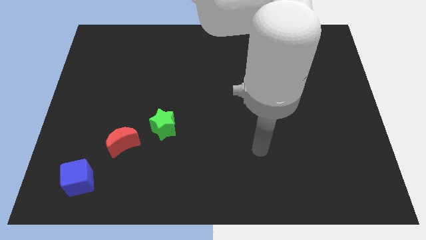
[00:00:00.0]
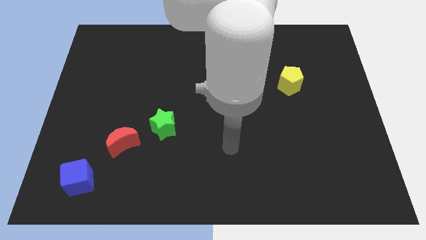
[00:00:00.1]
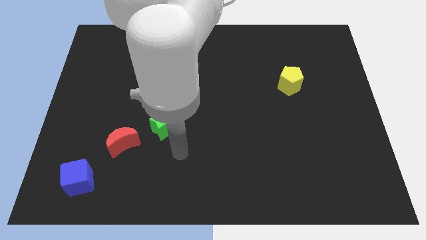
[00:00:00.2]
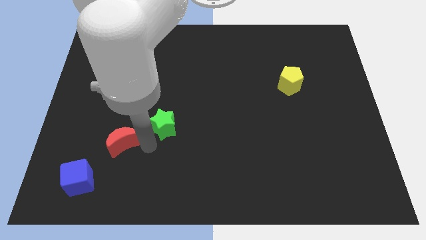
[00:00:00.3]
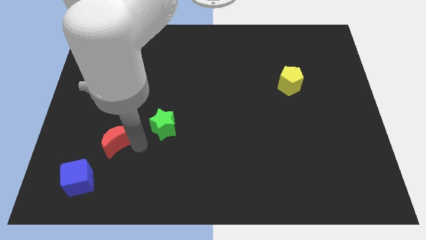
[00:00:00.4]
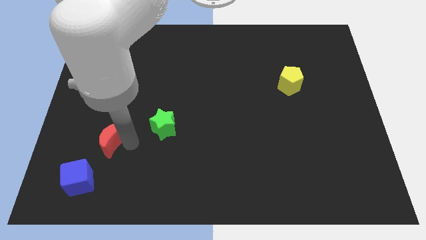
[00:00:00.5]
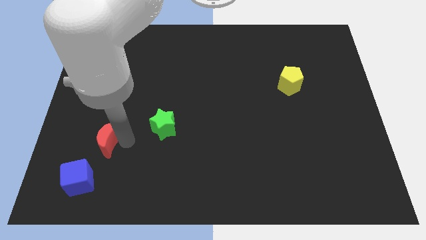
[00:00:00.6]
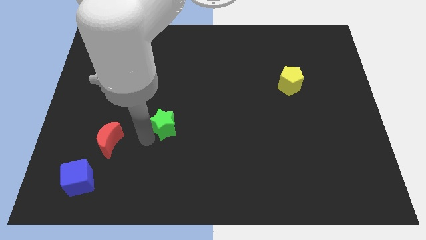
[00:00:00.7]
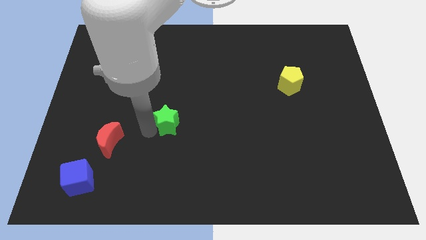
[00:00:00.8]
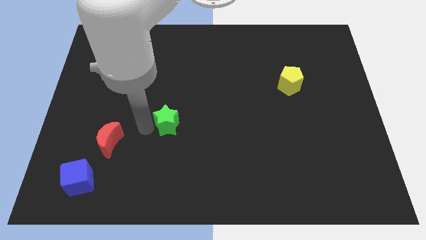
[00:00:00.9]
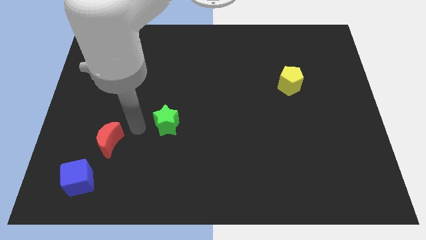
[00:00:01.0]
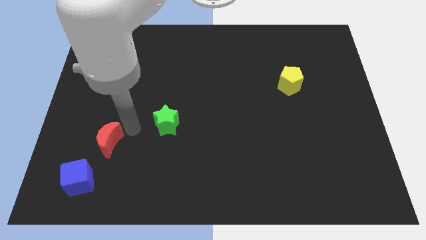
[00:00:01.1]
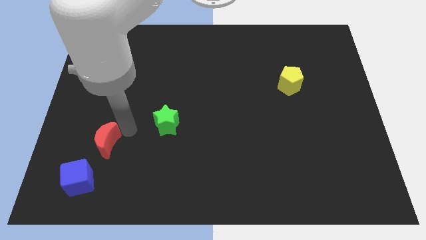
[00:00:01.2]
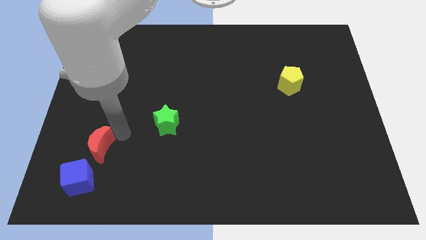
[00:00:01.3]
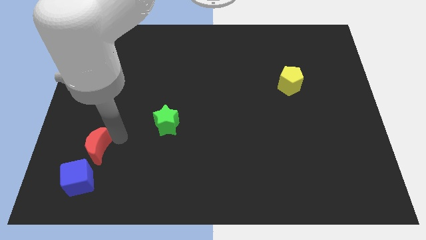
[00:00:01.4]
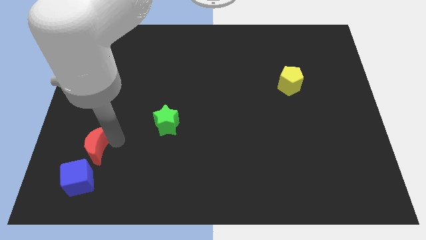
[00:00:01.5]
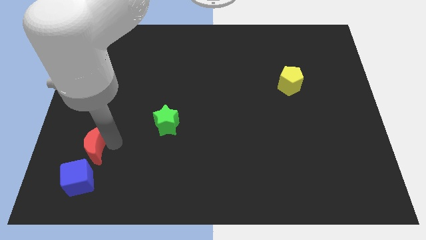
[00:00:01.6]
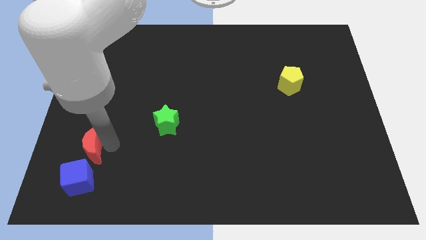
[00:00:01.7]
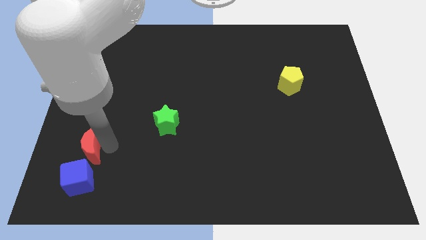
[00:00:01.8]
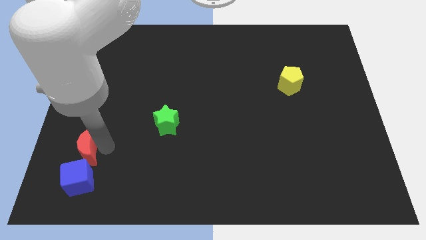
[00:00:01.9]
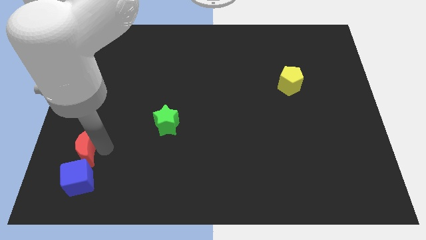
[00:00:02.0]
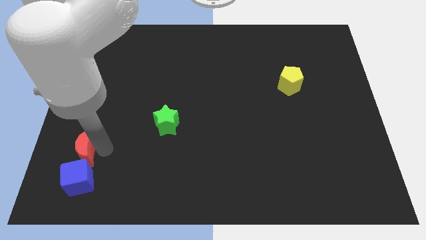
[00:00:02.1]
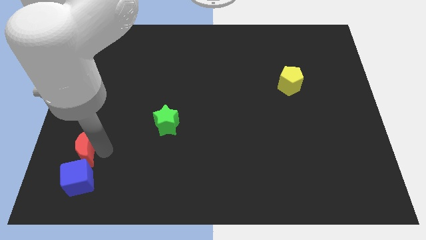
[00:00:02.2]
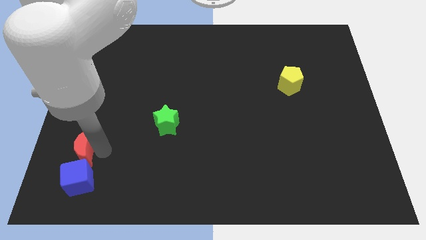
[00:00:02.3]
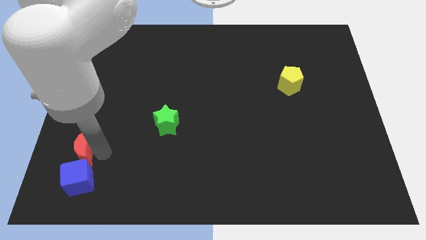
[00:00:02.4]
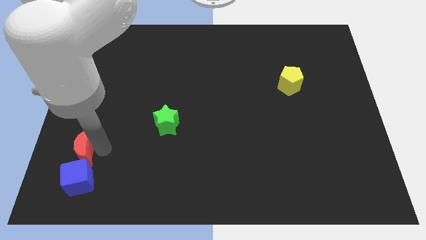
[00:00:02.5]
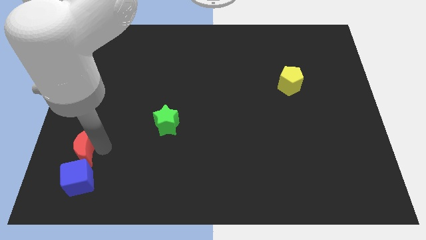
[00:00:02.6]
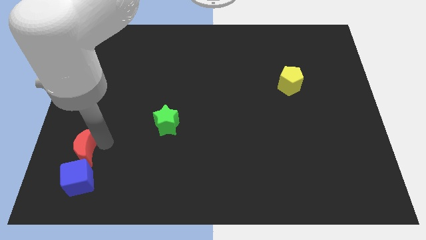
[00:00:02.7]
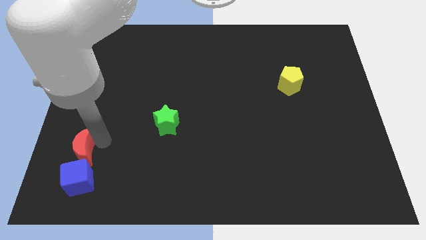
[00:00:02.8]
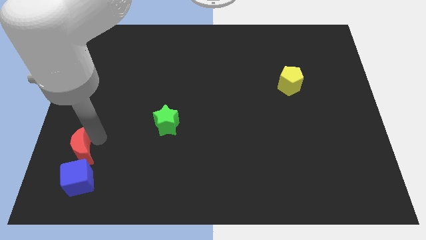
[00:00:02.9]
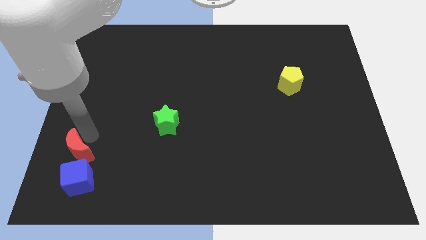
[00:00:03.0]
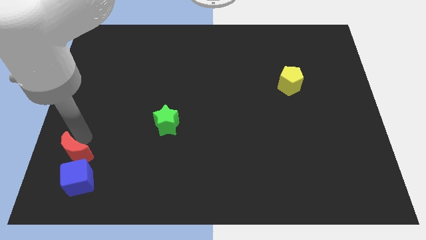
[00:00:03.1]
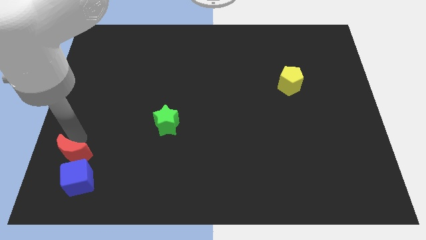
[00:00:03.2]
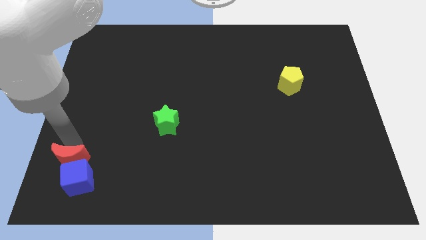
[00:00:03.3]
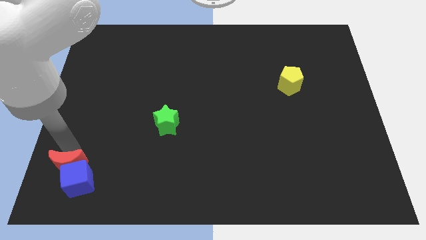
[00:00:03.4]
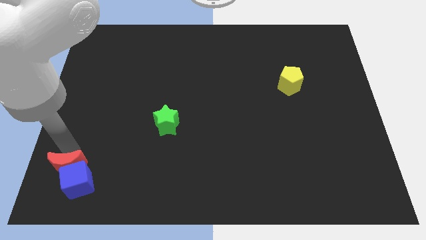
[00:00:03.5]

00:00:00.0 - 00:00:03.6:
put the moon close to the blue block

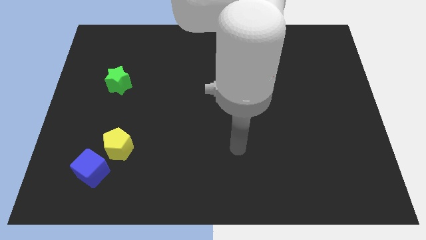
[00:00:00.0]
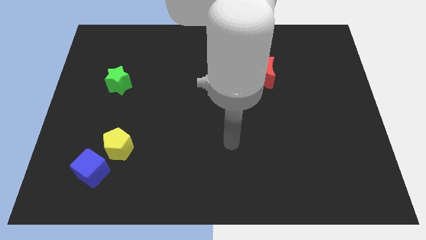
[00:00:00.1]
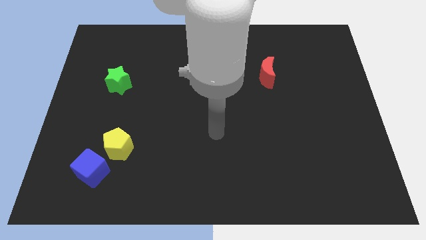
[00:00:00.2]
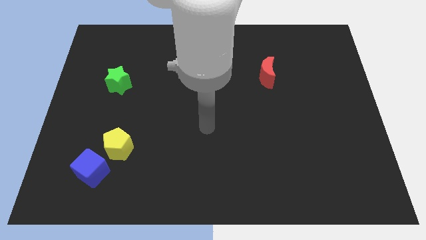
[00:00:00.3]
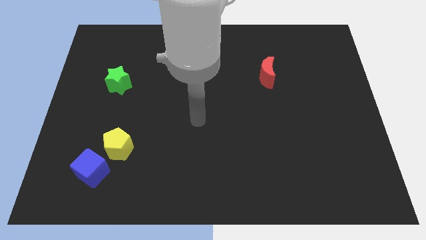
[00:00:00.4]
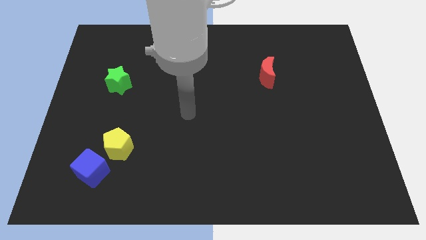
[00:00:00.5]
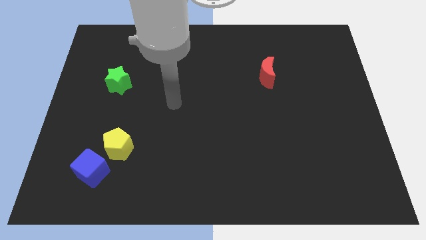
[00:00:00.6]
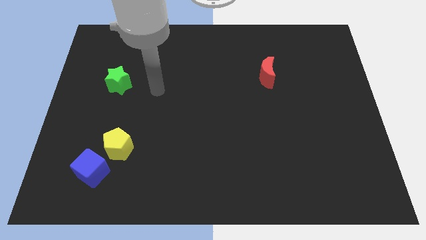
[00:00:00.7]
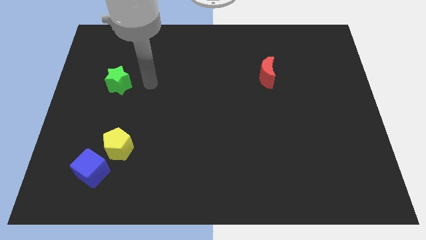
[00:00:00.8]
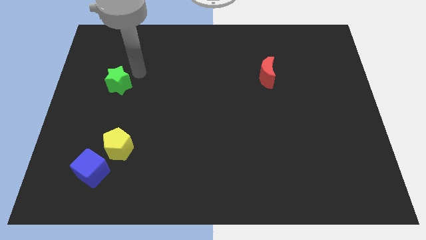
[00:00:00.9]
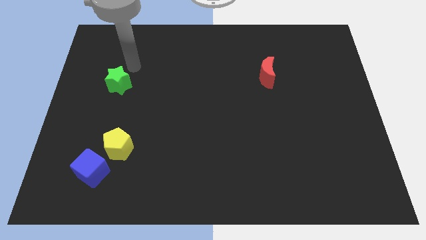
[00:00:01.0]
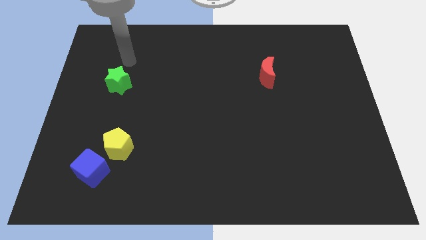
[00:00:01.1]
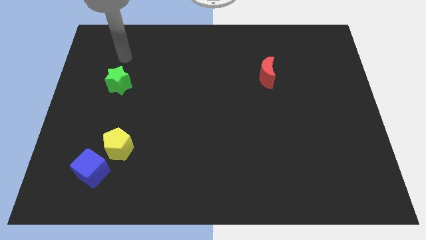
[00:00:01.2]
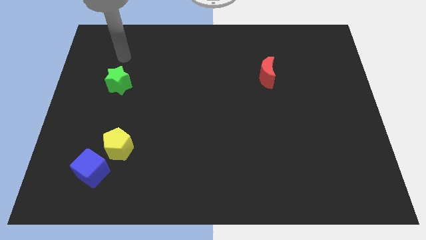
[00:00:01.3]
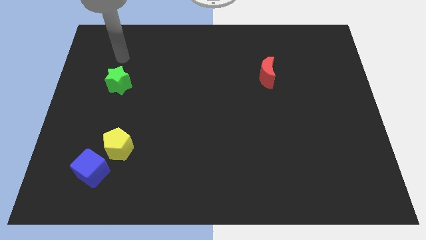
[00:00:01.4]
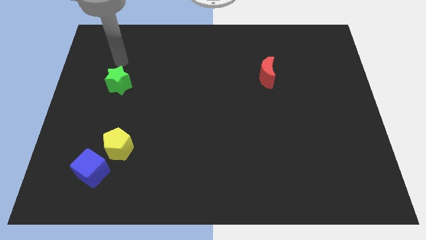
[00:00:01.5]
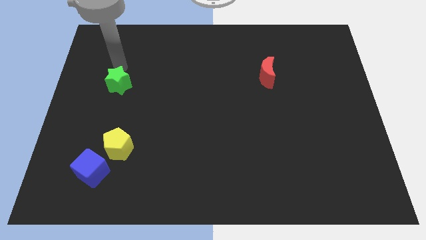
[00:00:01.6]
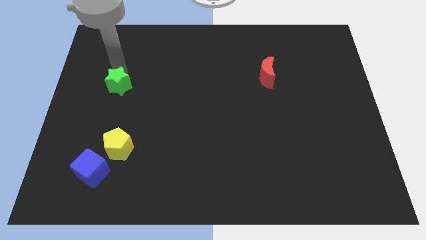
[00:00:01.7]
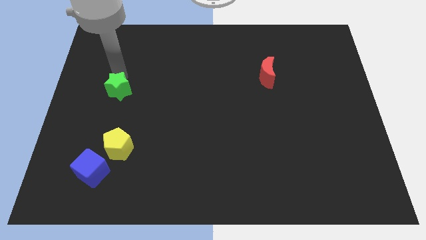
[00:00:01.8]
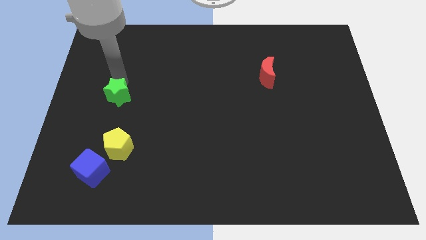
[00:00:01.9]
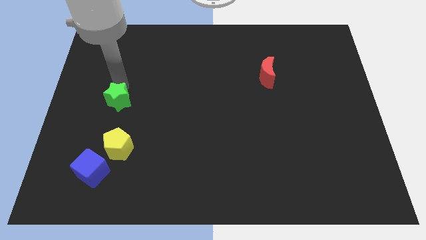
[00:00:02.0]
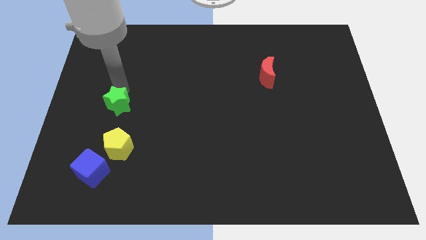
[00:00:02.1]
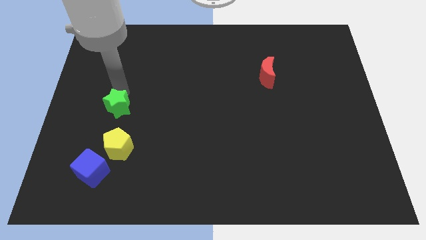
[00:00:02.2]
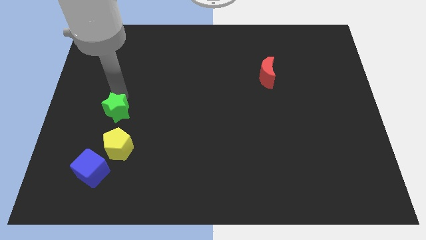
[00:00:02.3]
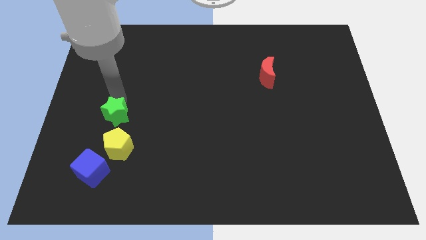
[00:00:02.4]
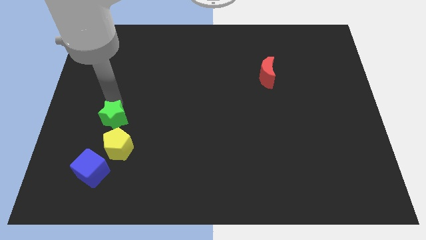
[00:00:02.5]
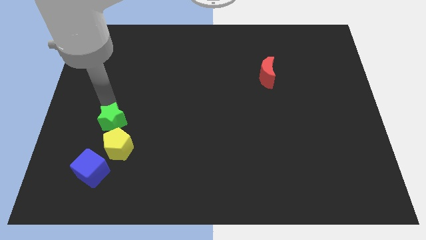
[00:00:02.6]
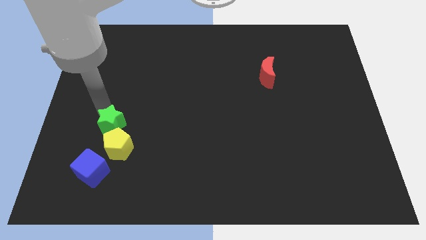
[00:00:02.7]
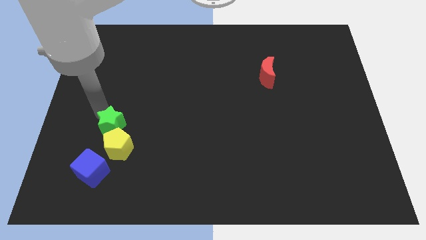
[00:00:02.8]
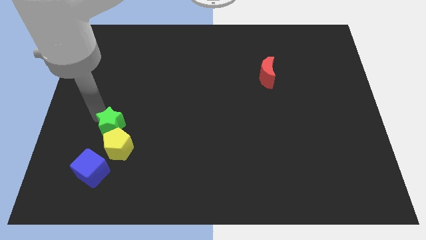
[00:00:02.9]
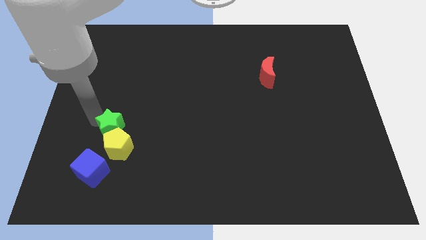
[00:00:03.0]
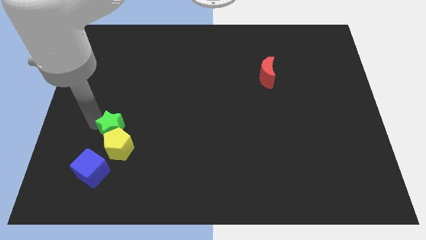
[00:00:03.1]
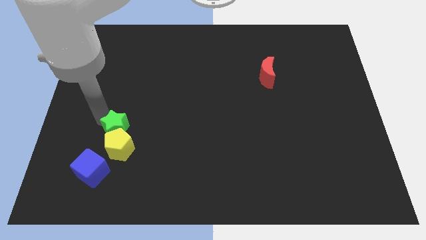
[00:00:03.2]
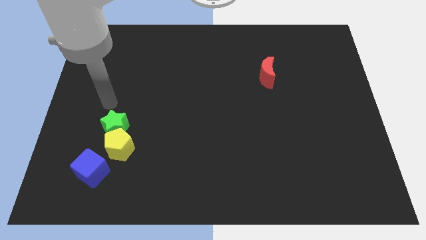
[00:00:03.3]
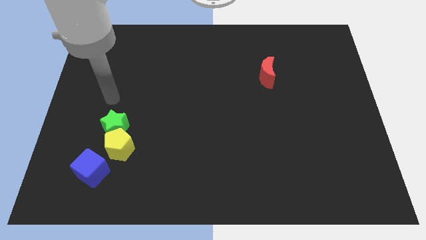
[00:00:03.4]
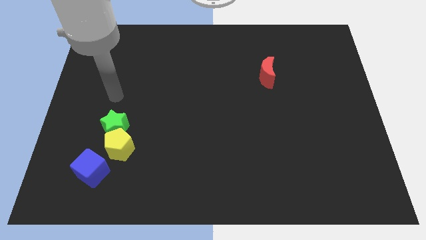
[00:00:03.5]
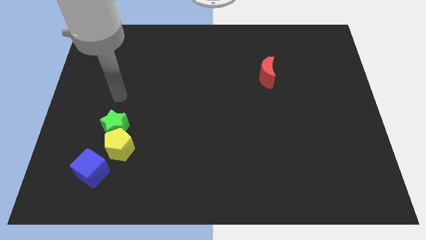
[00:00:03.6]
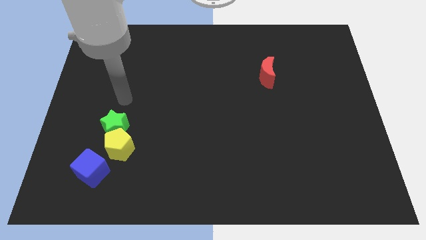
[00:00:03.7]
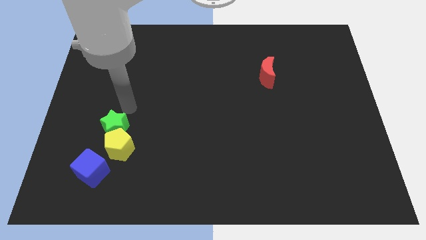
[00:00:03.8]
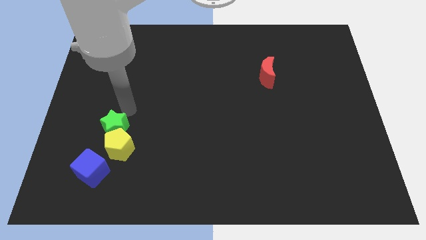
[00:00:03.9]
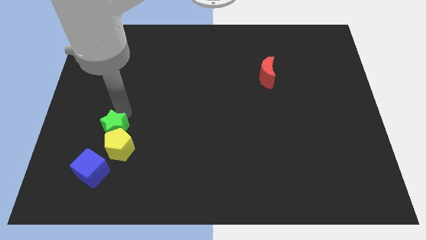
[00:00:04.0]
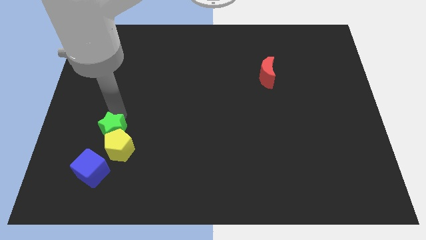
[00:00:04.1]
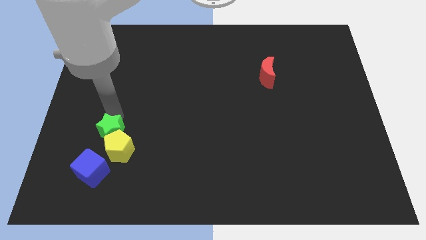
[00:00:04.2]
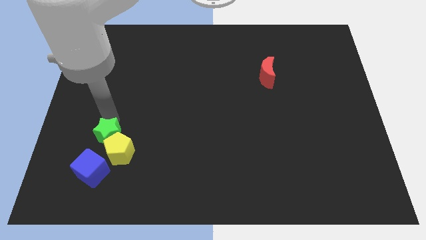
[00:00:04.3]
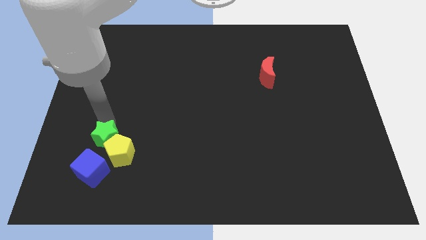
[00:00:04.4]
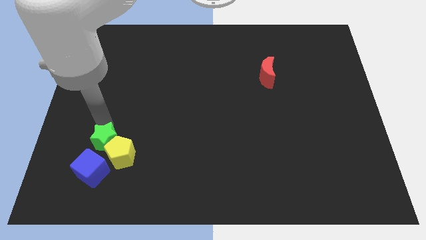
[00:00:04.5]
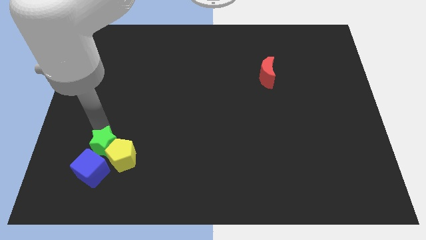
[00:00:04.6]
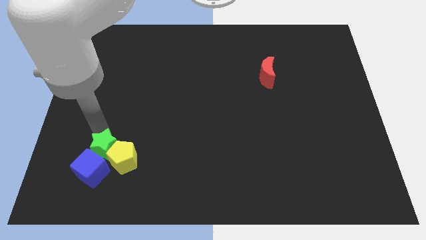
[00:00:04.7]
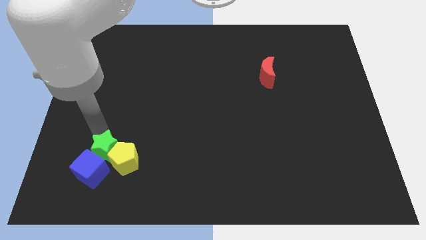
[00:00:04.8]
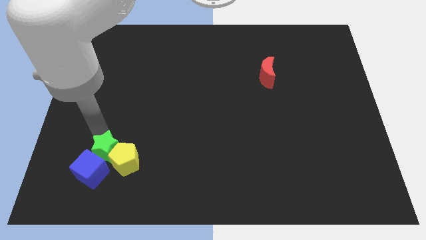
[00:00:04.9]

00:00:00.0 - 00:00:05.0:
move the star towards the blue cube
